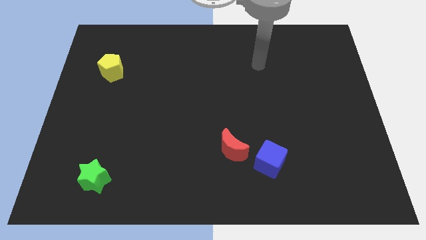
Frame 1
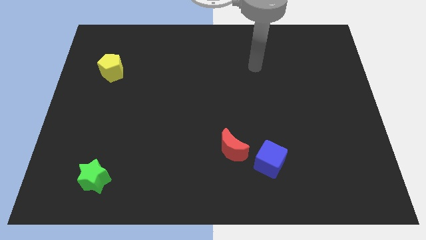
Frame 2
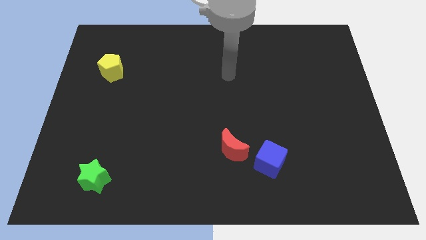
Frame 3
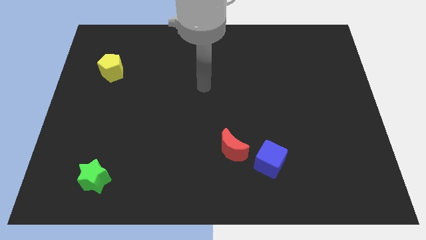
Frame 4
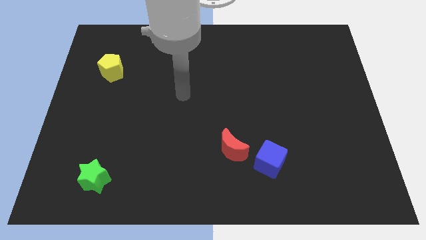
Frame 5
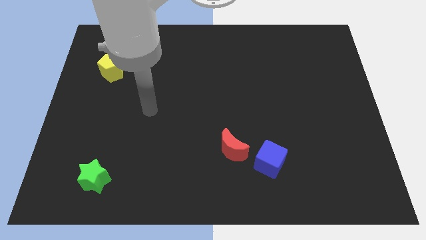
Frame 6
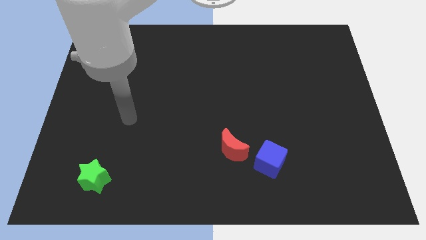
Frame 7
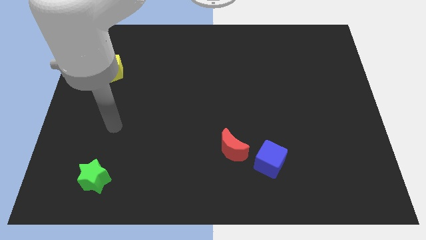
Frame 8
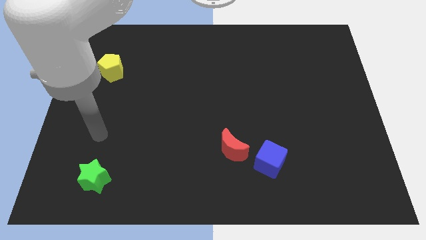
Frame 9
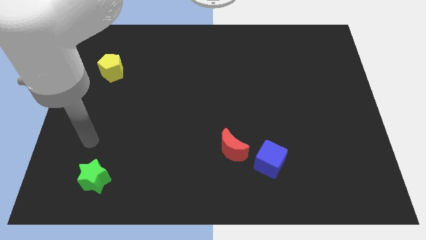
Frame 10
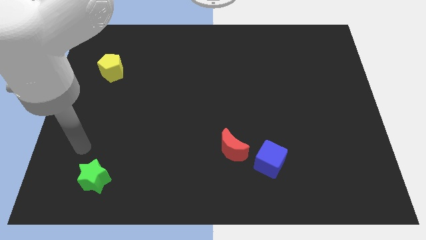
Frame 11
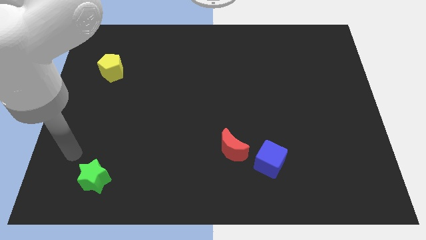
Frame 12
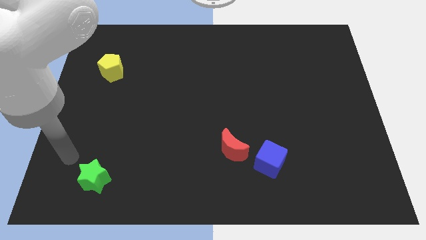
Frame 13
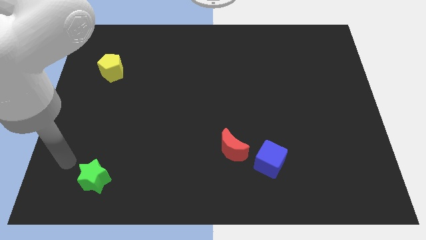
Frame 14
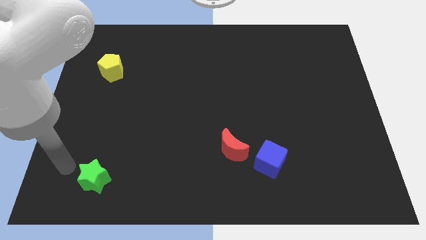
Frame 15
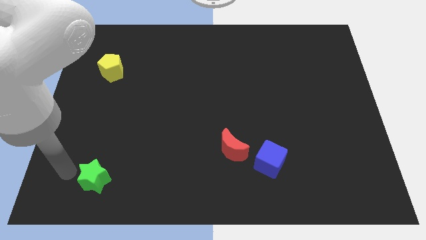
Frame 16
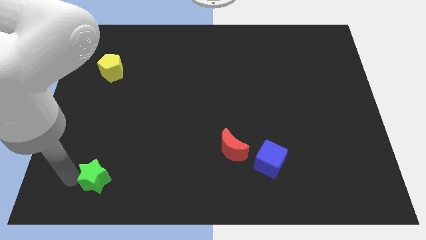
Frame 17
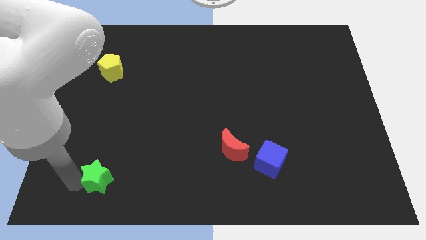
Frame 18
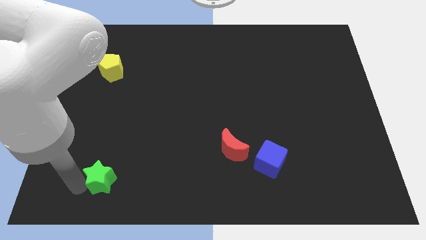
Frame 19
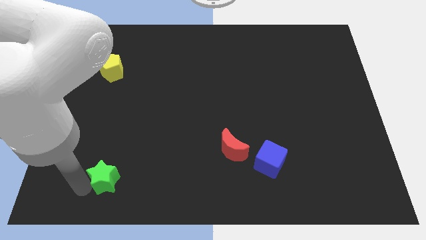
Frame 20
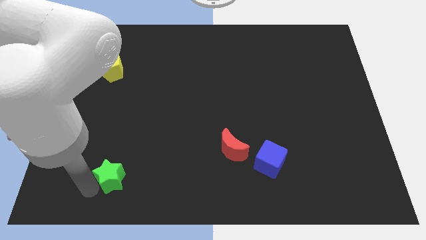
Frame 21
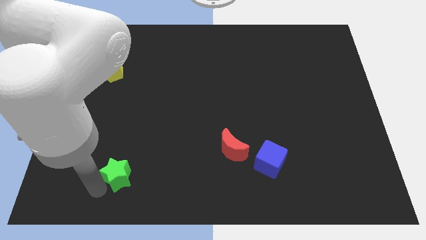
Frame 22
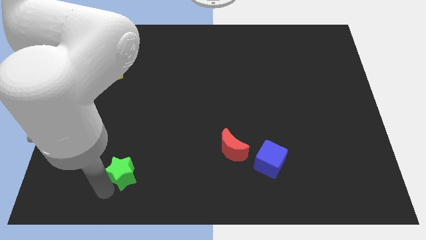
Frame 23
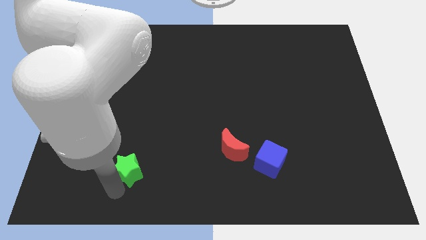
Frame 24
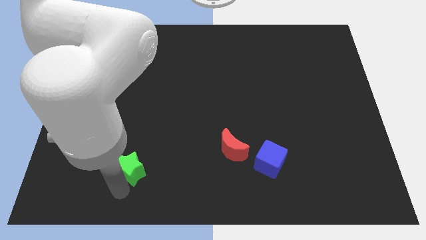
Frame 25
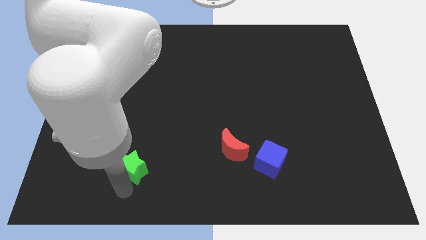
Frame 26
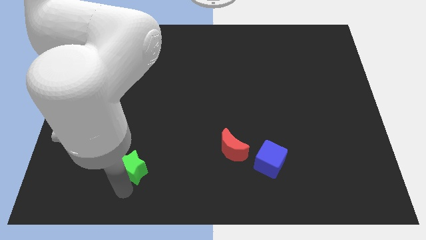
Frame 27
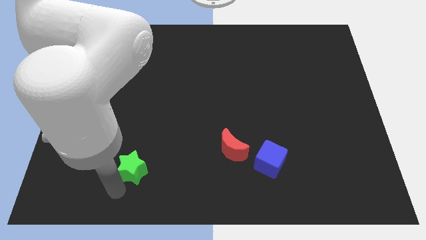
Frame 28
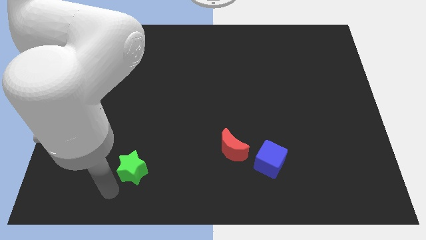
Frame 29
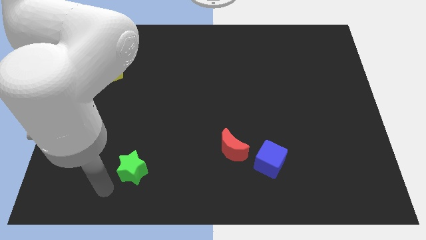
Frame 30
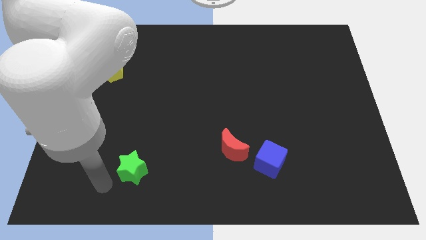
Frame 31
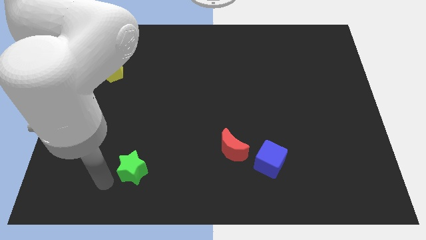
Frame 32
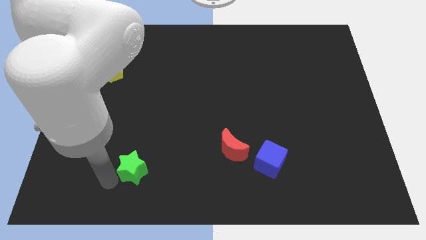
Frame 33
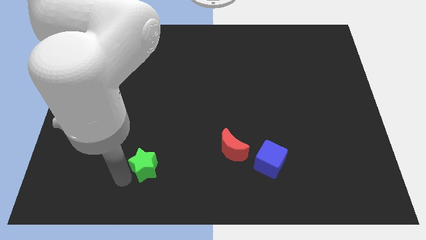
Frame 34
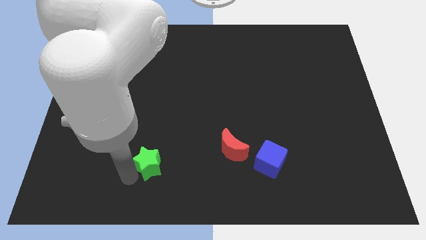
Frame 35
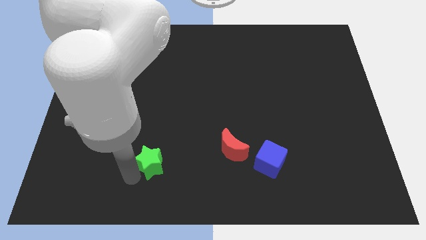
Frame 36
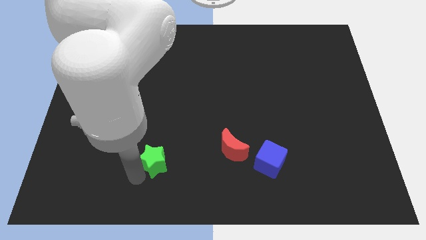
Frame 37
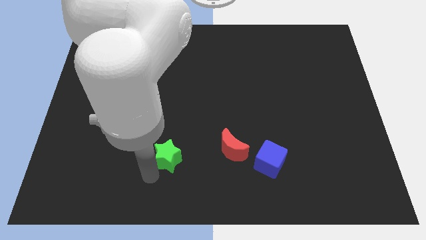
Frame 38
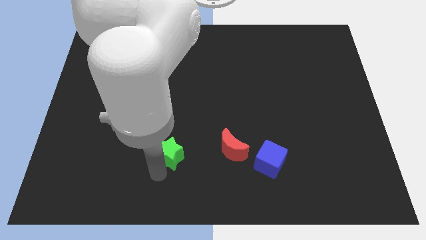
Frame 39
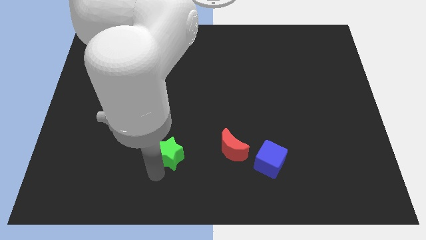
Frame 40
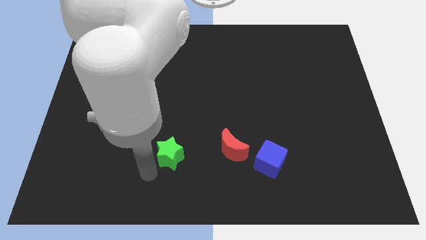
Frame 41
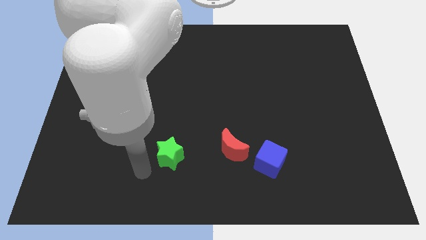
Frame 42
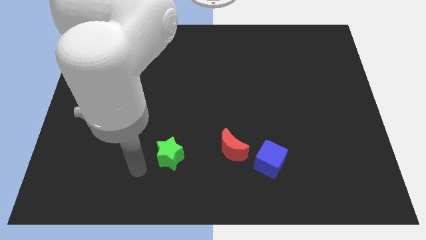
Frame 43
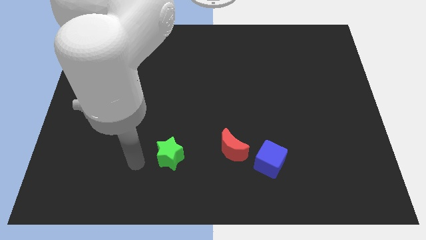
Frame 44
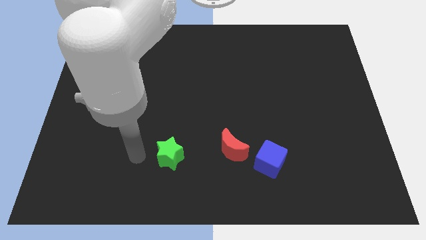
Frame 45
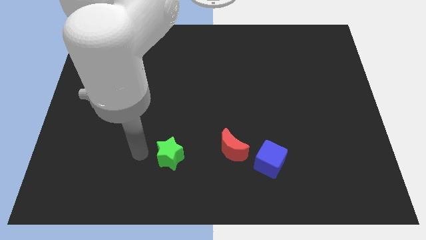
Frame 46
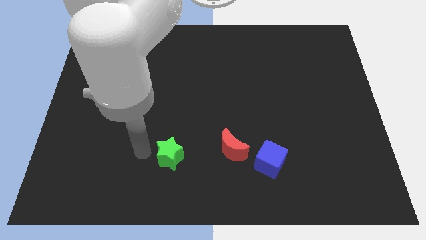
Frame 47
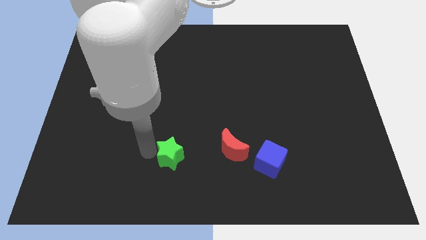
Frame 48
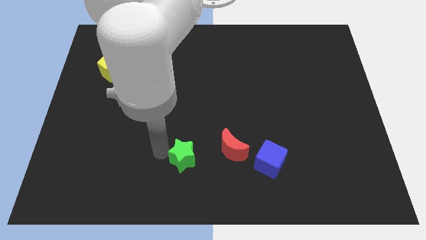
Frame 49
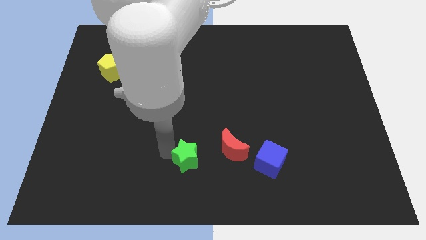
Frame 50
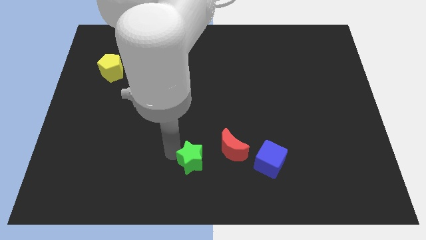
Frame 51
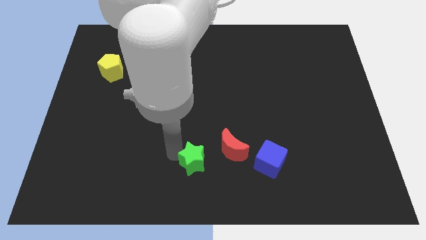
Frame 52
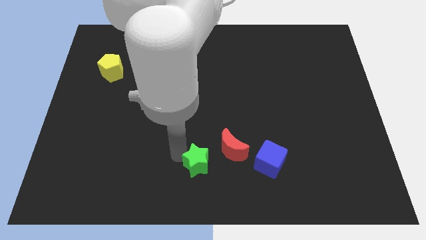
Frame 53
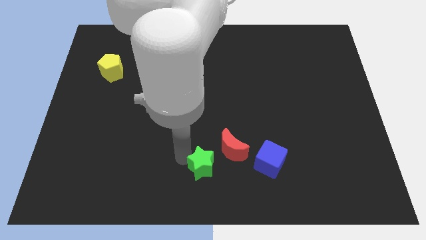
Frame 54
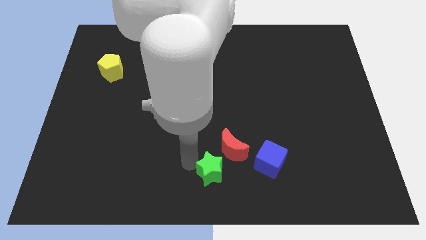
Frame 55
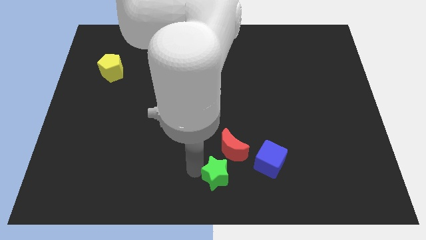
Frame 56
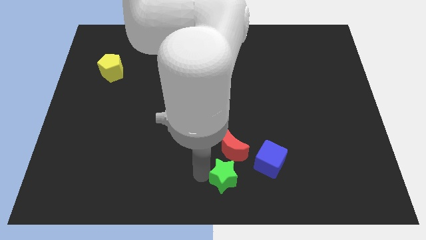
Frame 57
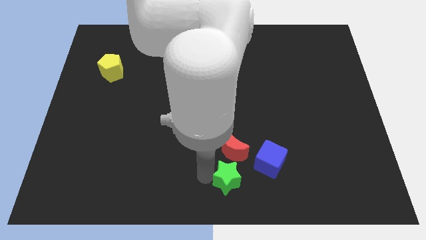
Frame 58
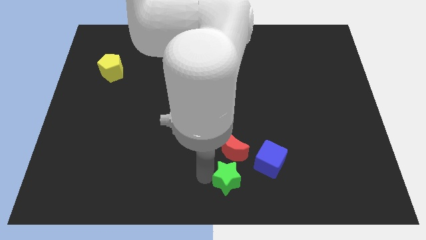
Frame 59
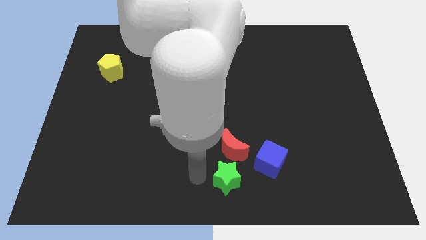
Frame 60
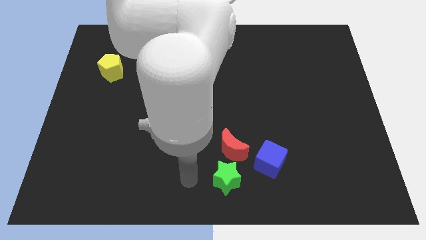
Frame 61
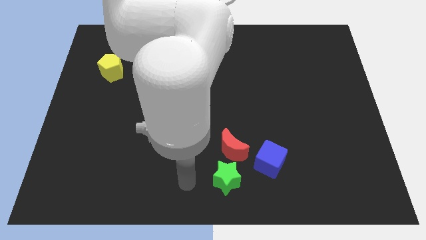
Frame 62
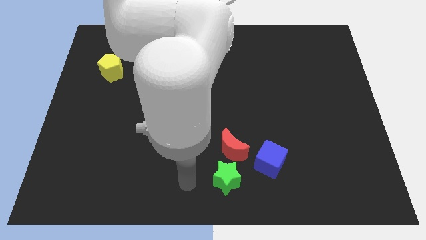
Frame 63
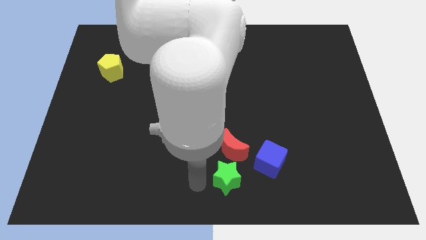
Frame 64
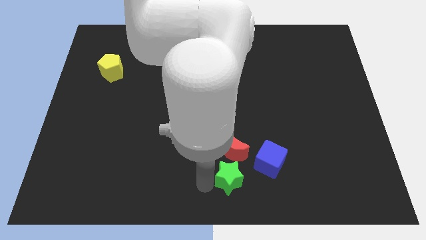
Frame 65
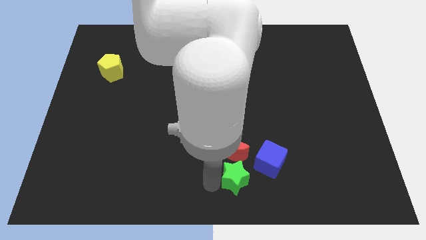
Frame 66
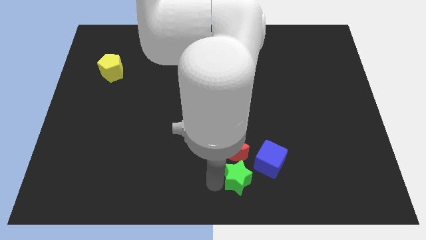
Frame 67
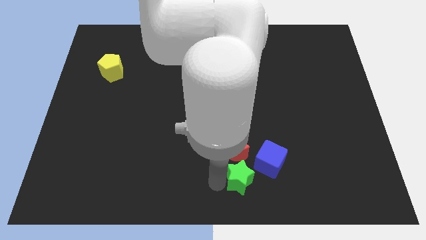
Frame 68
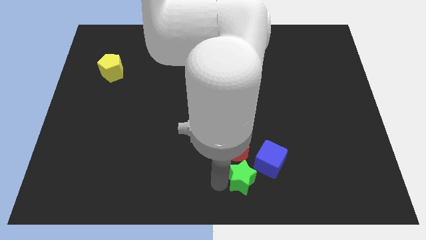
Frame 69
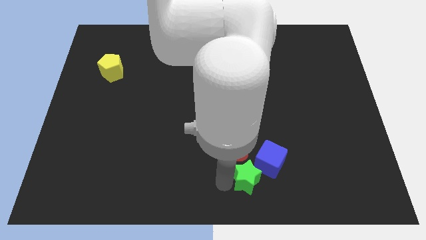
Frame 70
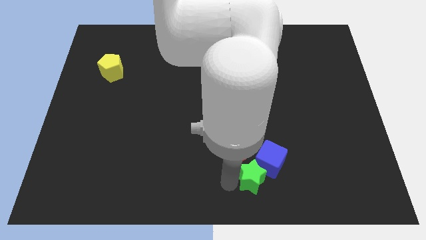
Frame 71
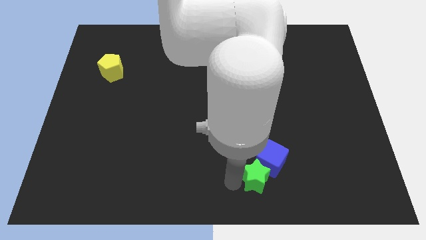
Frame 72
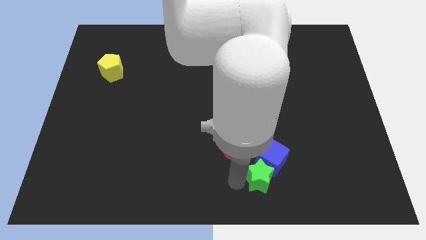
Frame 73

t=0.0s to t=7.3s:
move the green star next to the cube

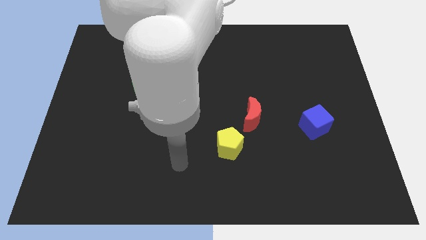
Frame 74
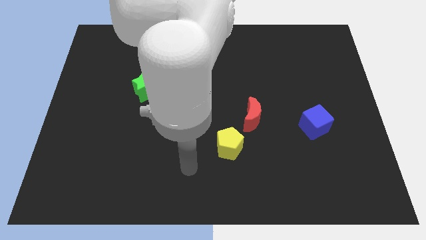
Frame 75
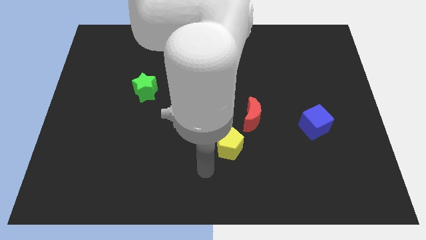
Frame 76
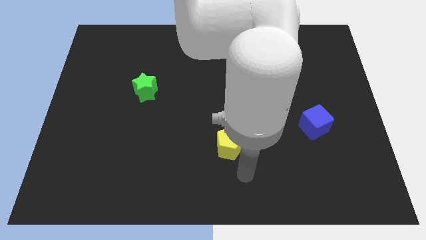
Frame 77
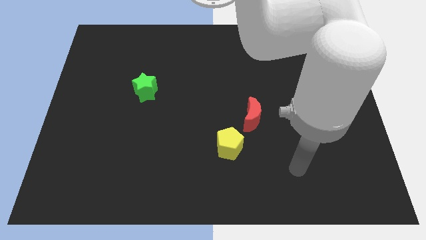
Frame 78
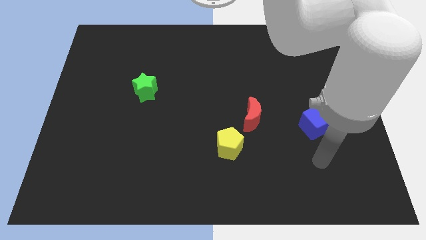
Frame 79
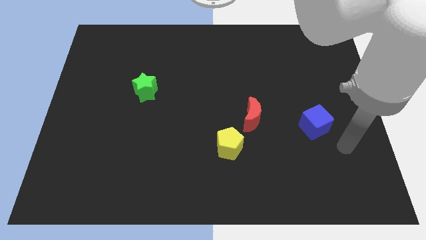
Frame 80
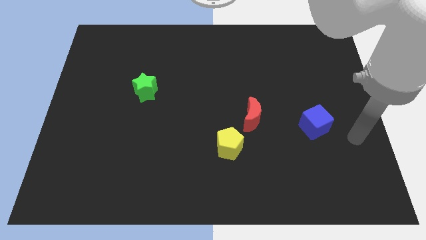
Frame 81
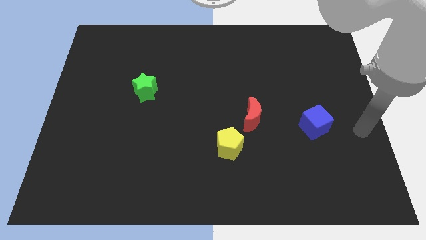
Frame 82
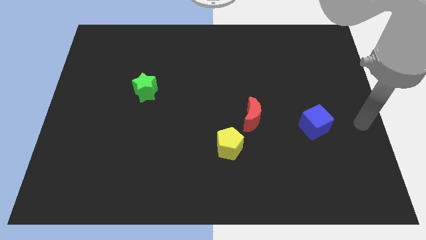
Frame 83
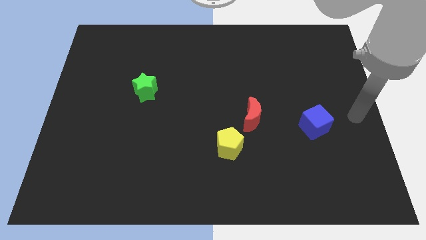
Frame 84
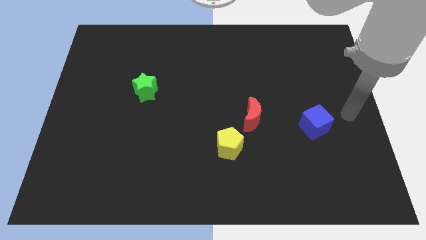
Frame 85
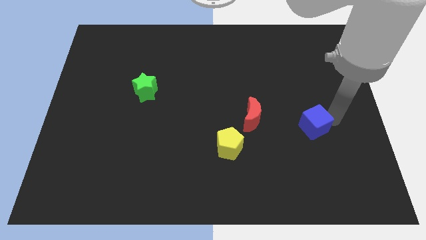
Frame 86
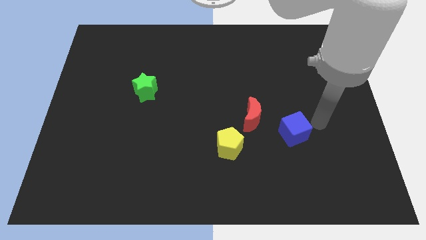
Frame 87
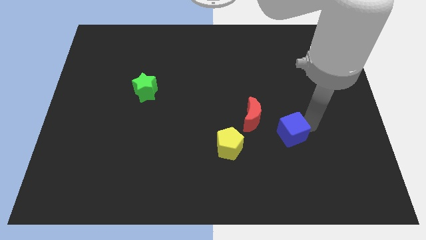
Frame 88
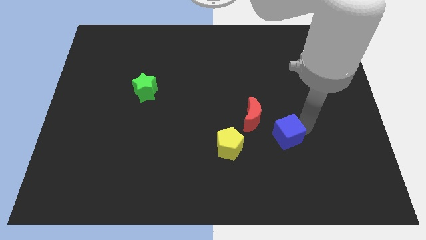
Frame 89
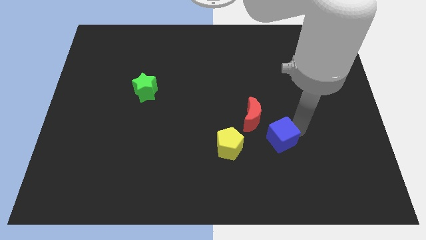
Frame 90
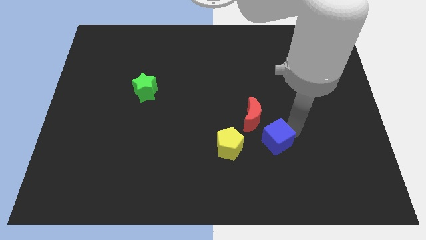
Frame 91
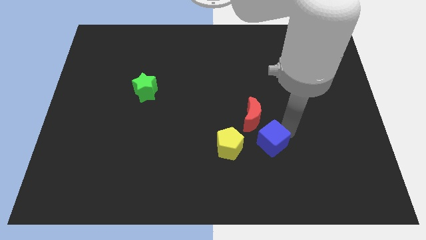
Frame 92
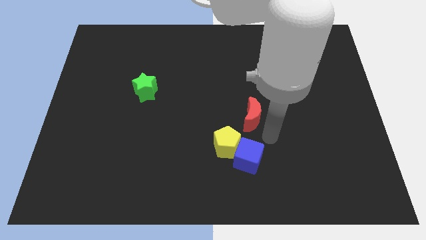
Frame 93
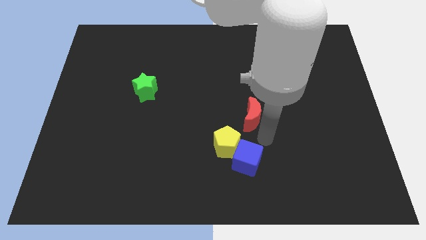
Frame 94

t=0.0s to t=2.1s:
put the blue block next to the pentagon
